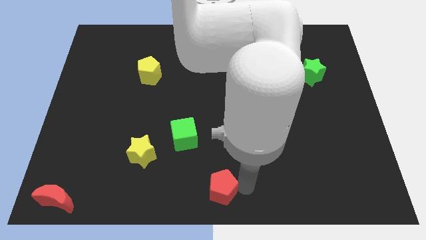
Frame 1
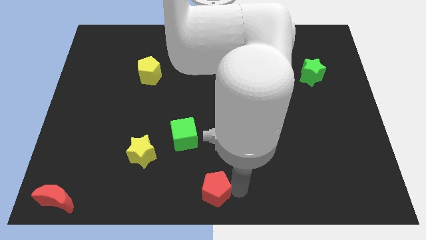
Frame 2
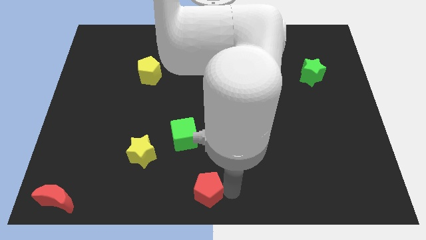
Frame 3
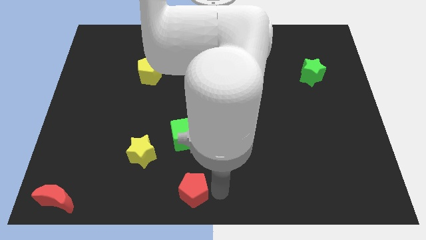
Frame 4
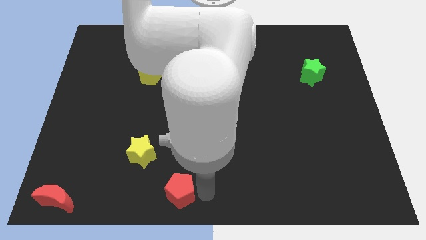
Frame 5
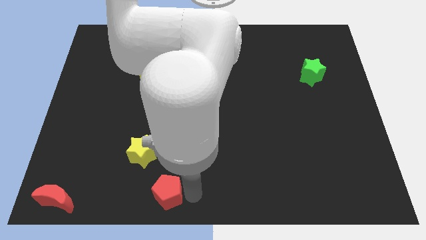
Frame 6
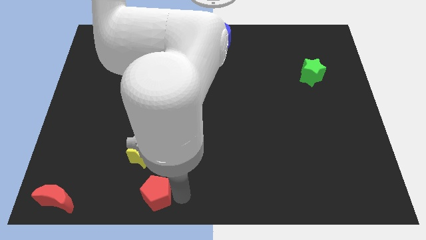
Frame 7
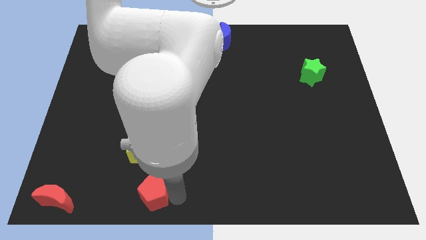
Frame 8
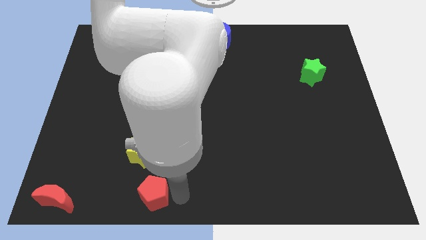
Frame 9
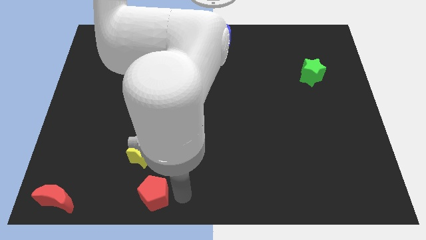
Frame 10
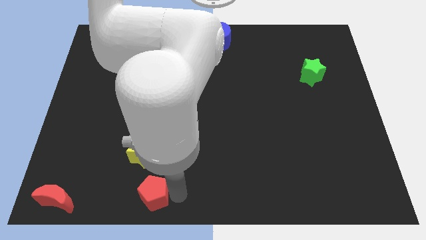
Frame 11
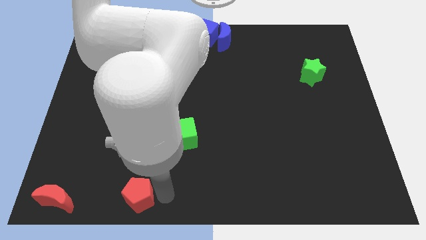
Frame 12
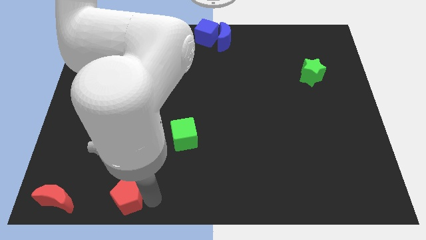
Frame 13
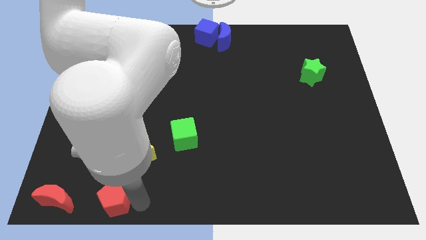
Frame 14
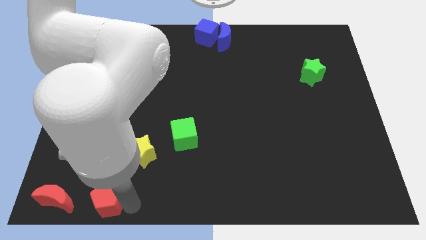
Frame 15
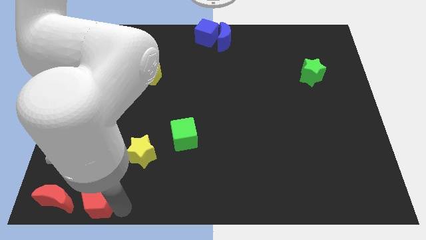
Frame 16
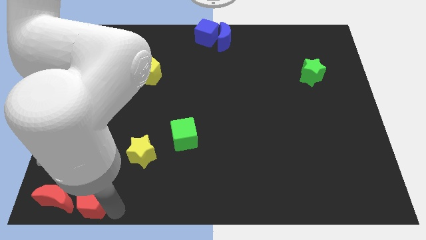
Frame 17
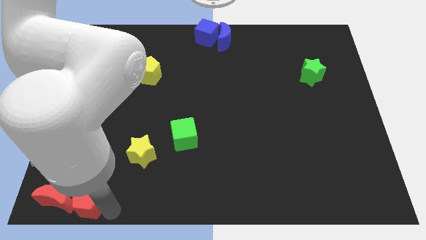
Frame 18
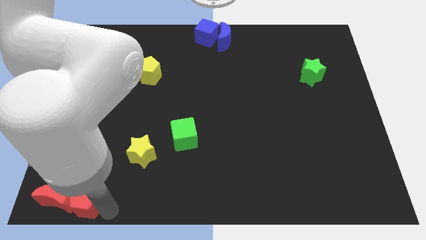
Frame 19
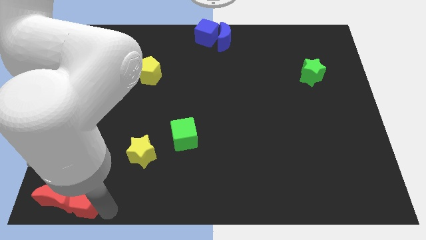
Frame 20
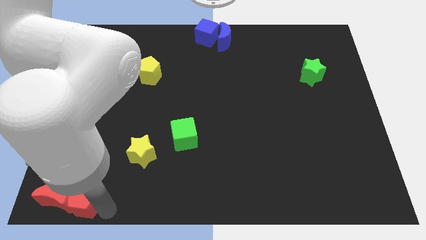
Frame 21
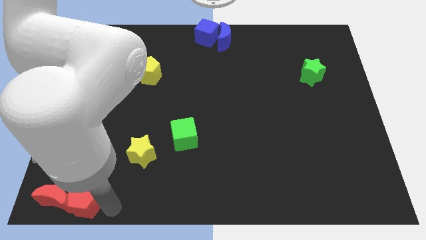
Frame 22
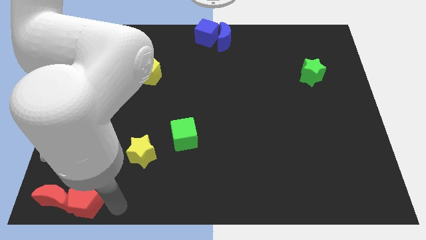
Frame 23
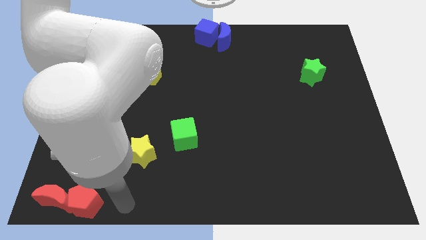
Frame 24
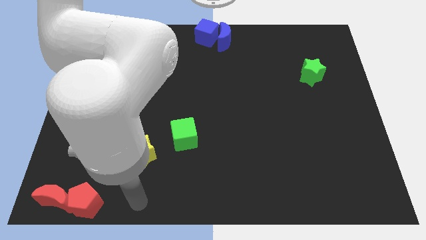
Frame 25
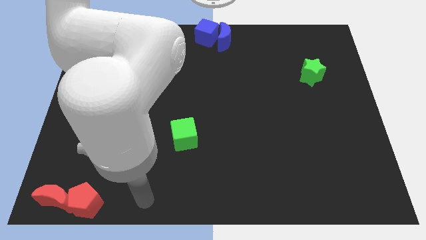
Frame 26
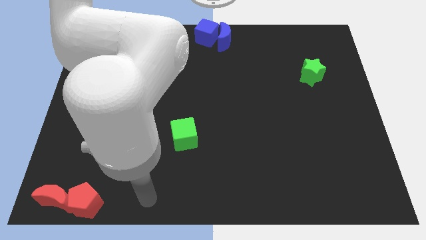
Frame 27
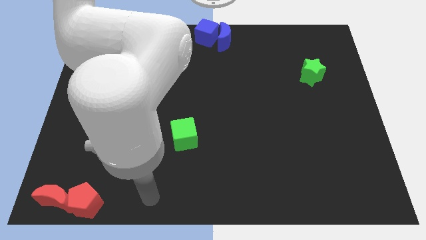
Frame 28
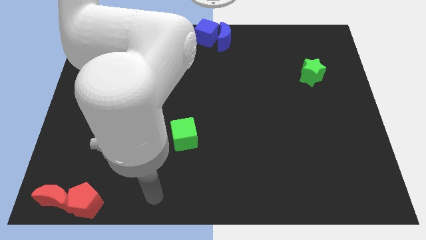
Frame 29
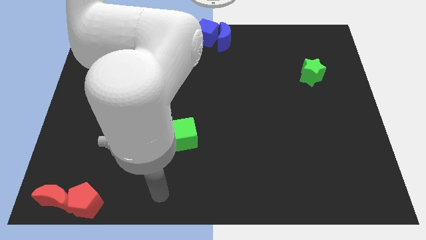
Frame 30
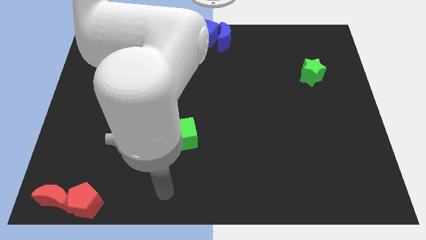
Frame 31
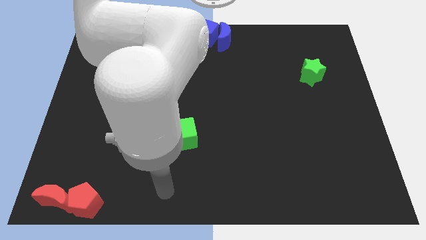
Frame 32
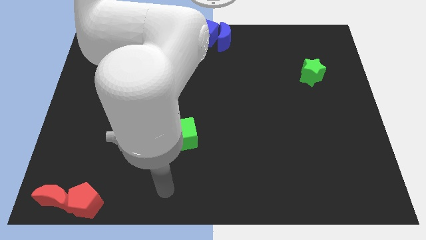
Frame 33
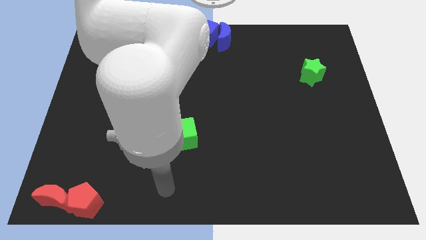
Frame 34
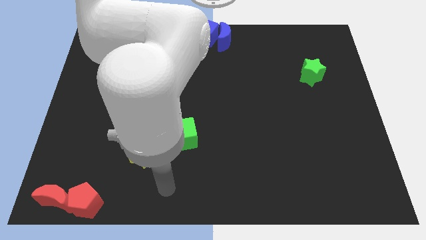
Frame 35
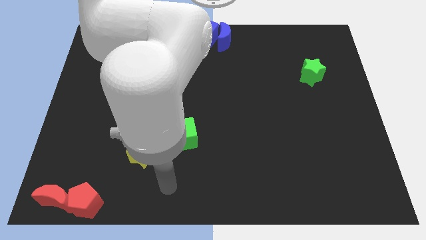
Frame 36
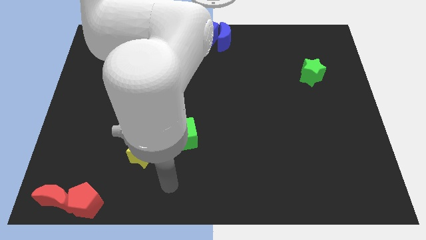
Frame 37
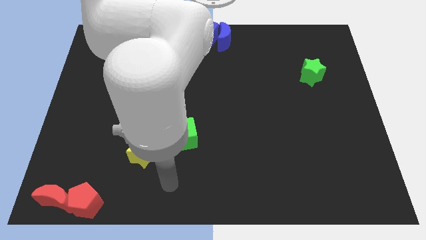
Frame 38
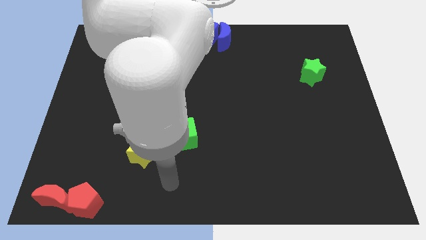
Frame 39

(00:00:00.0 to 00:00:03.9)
move the red pentagon to the right side of the red crescent

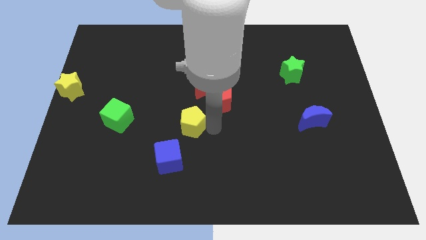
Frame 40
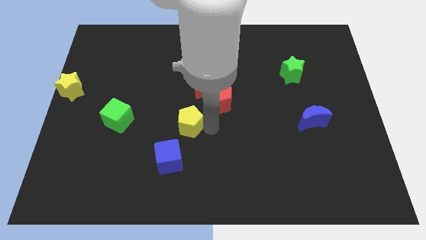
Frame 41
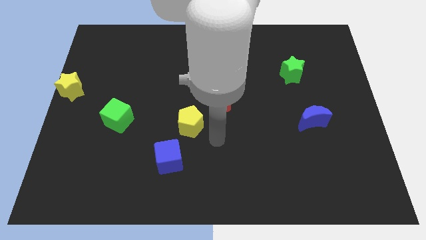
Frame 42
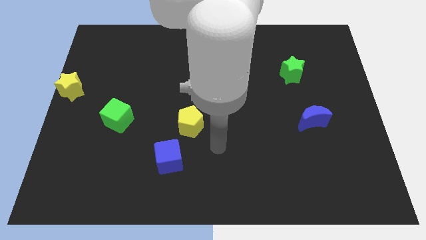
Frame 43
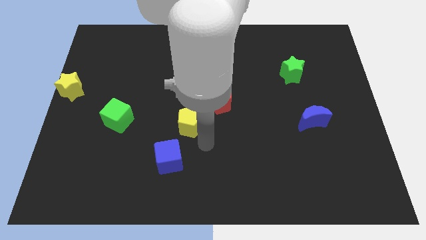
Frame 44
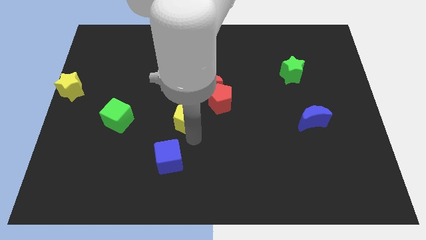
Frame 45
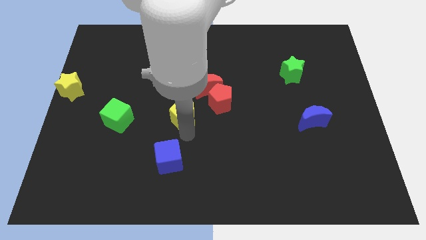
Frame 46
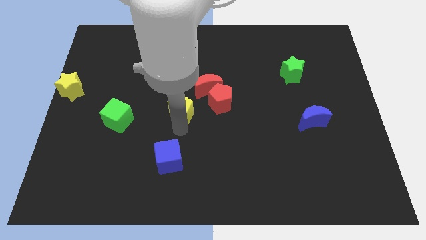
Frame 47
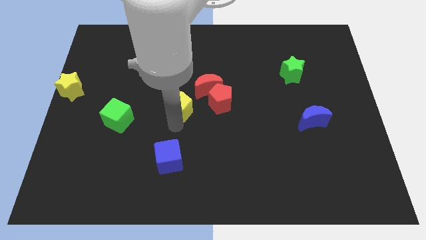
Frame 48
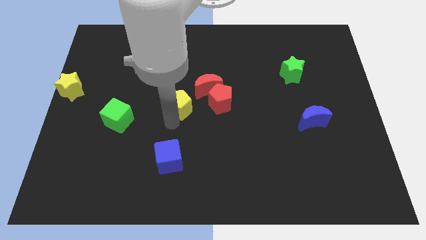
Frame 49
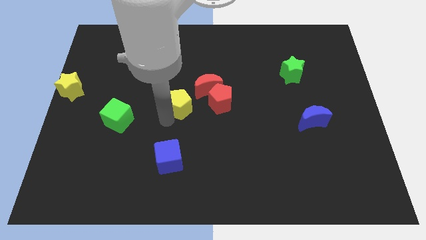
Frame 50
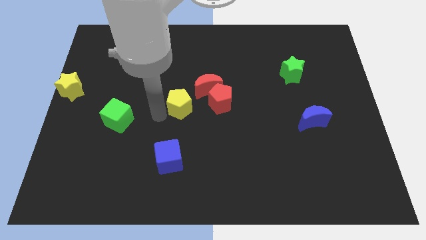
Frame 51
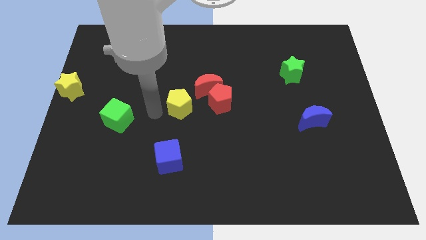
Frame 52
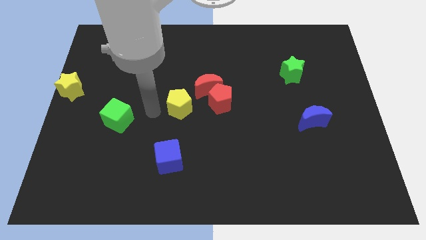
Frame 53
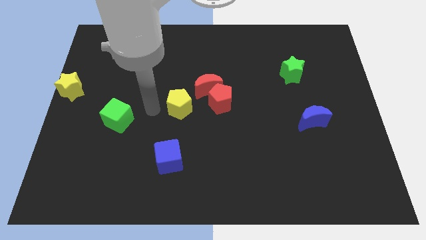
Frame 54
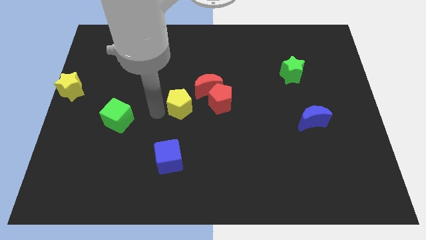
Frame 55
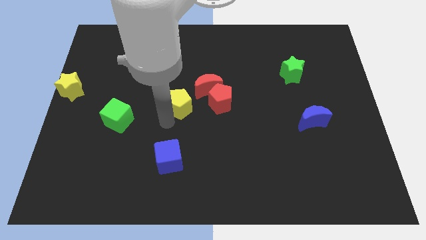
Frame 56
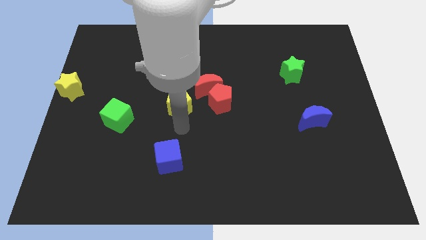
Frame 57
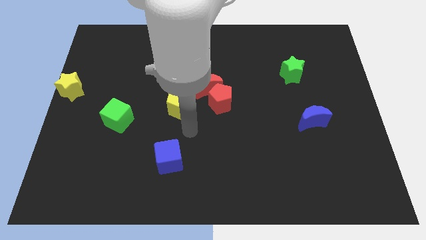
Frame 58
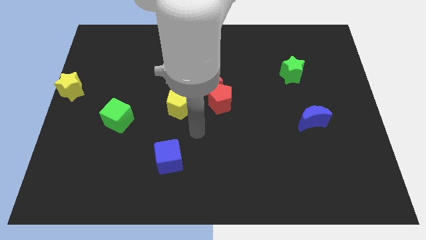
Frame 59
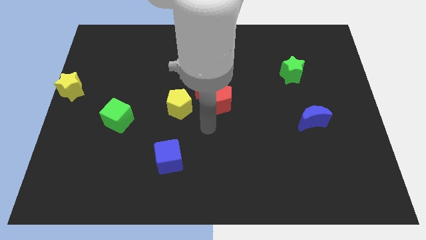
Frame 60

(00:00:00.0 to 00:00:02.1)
move the yellow pentagon left to the red pentagon

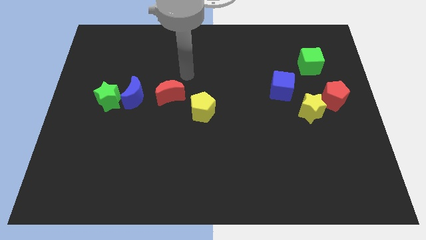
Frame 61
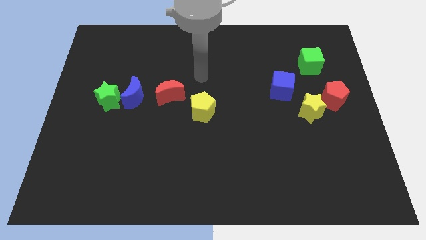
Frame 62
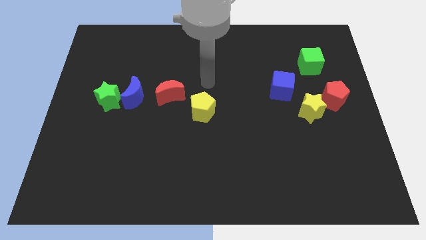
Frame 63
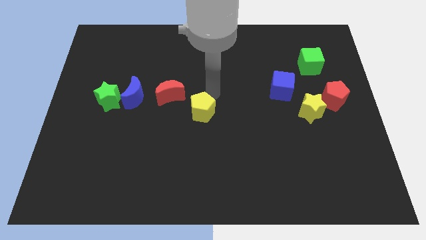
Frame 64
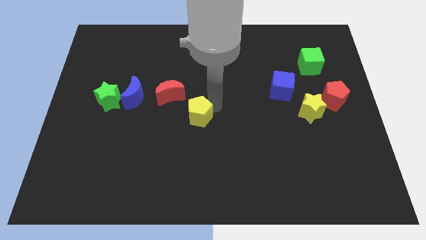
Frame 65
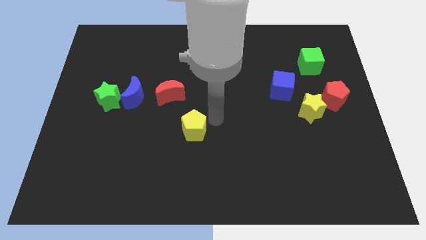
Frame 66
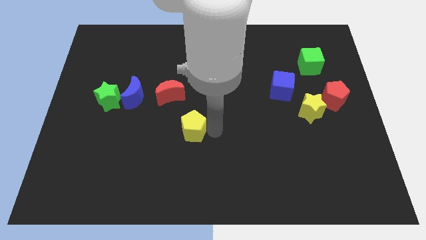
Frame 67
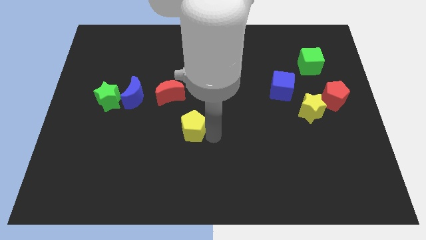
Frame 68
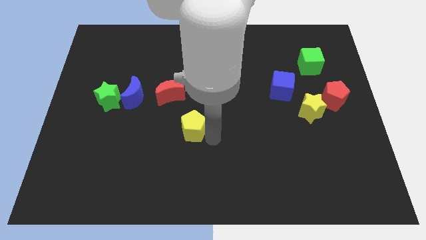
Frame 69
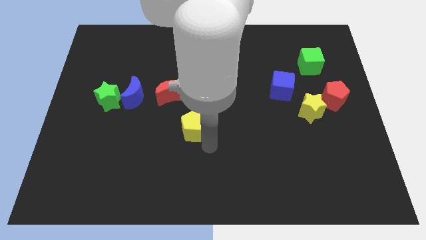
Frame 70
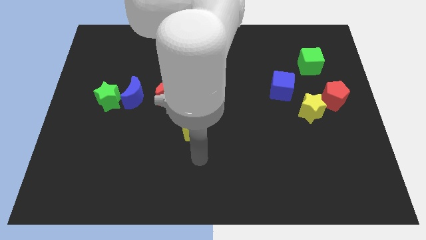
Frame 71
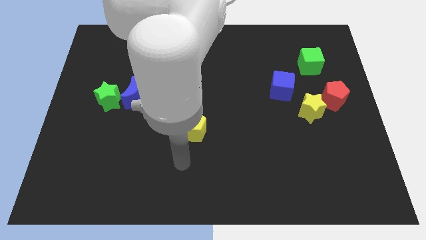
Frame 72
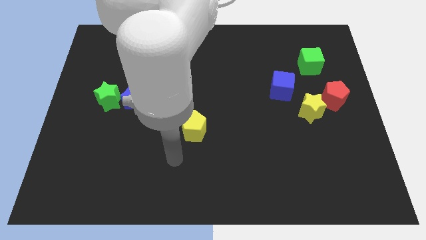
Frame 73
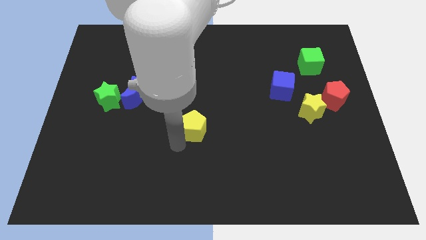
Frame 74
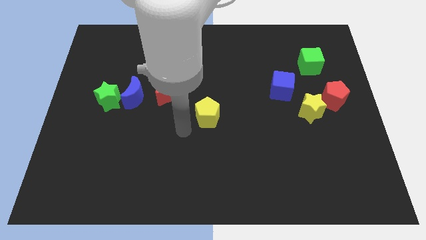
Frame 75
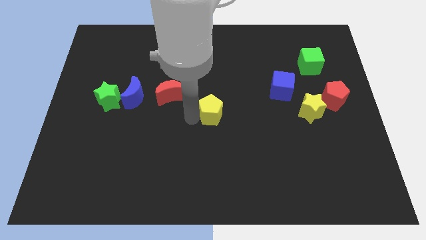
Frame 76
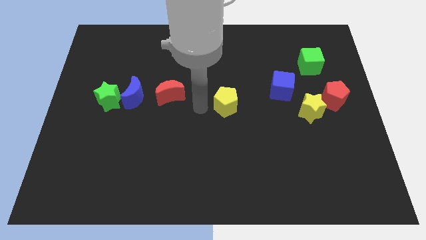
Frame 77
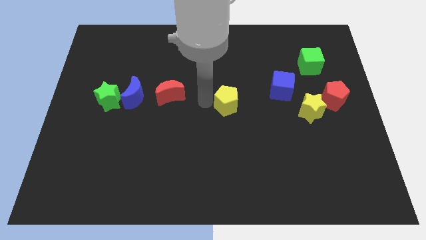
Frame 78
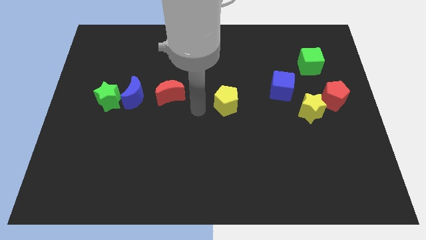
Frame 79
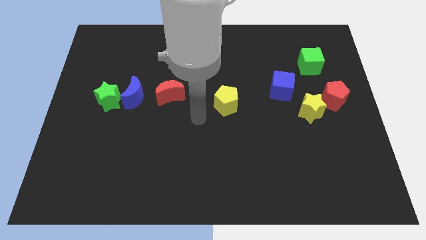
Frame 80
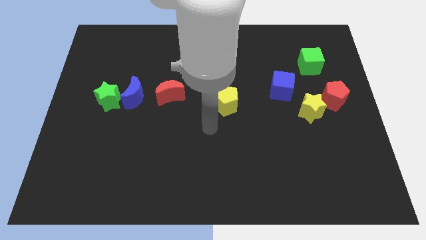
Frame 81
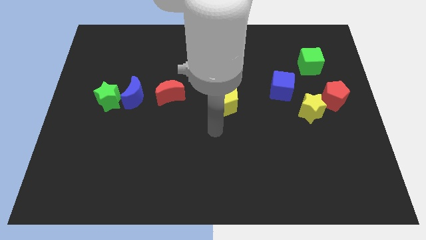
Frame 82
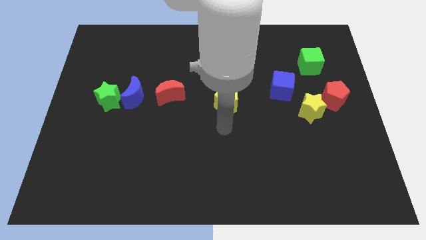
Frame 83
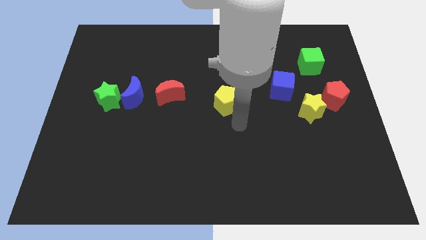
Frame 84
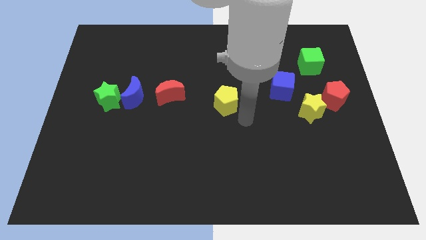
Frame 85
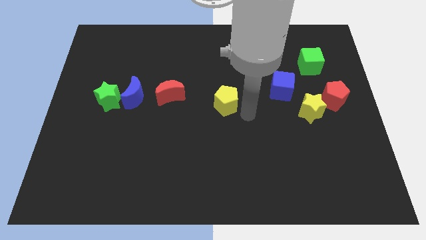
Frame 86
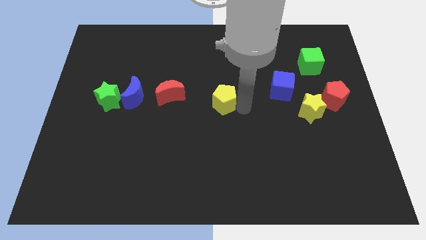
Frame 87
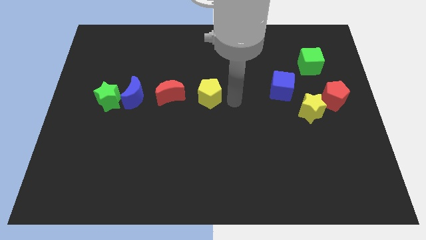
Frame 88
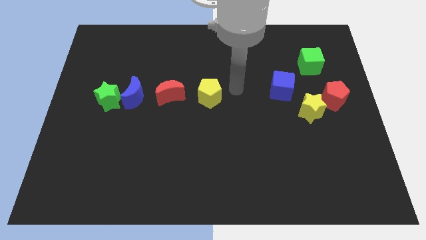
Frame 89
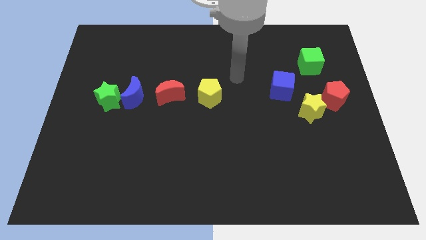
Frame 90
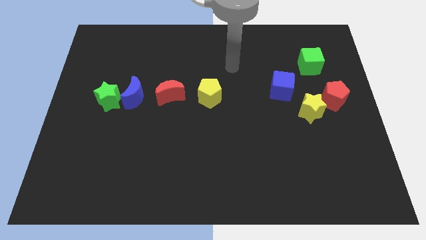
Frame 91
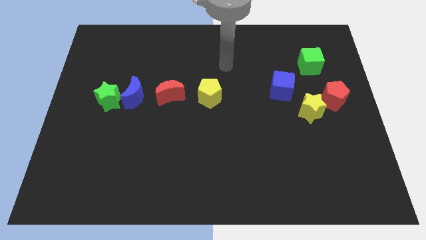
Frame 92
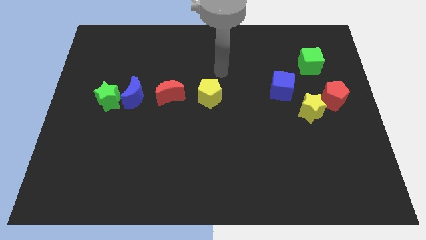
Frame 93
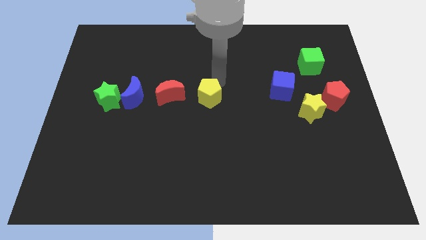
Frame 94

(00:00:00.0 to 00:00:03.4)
push the yellow pentagon to the center of the board
